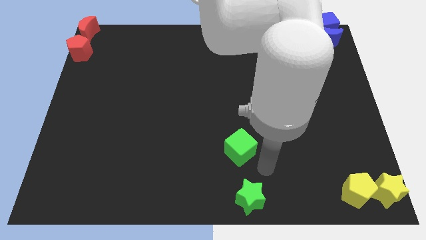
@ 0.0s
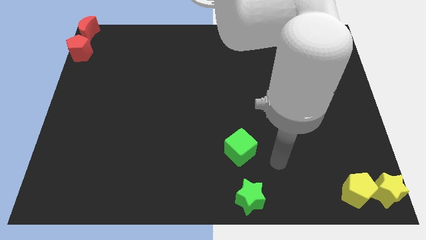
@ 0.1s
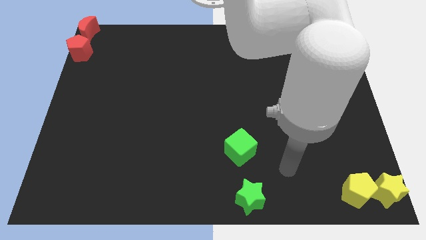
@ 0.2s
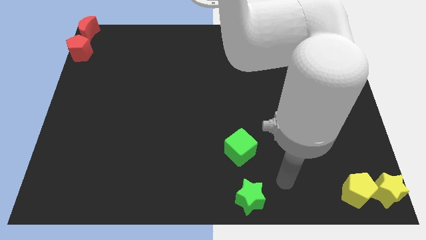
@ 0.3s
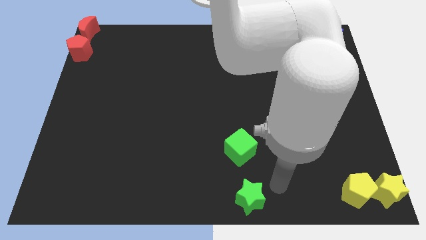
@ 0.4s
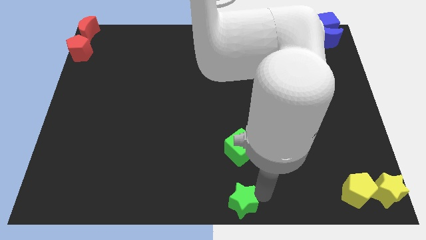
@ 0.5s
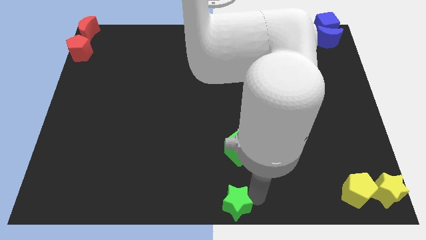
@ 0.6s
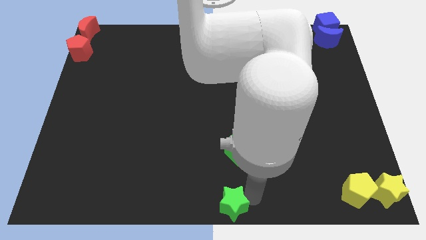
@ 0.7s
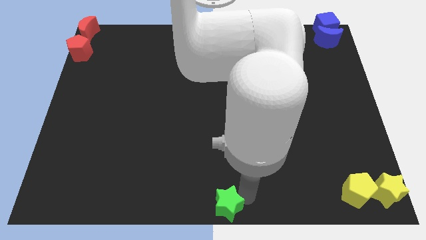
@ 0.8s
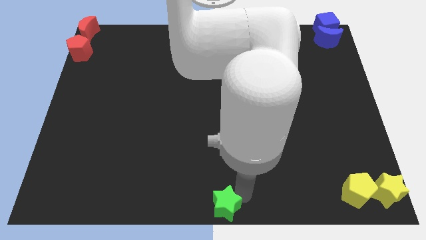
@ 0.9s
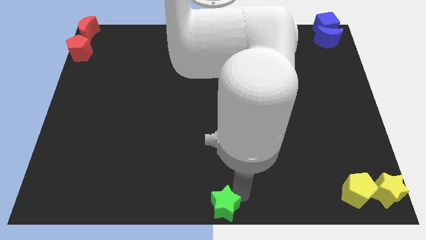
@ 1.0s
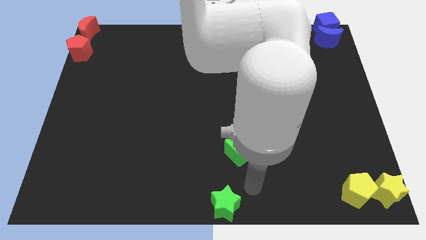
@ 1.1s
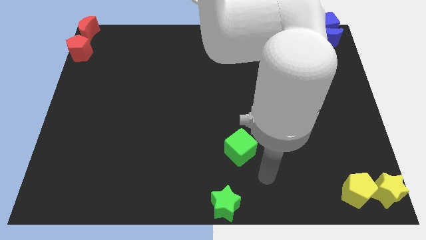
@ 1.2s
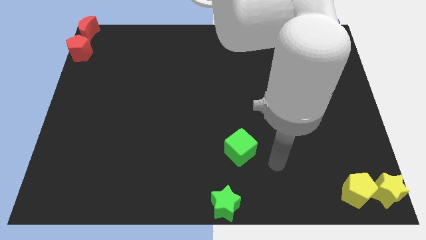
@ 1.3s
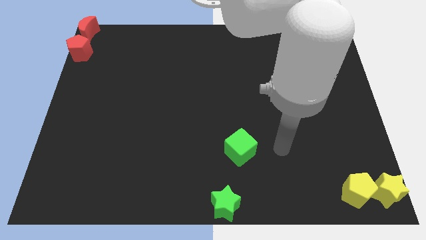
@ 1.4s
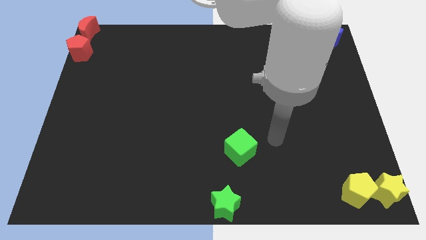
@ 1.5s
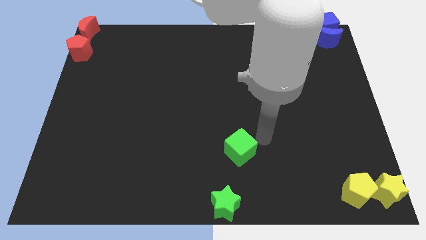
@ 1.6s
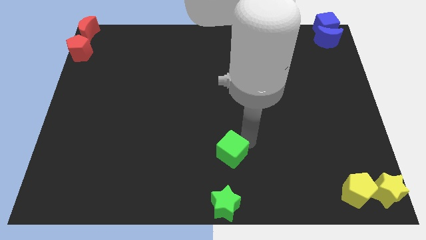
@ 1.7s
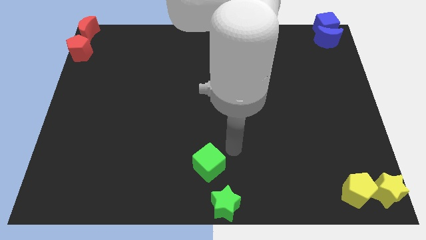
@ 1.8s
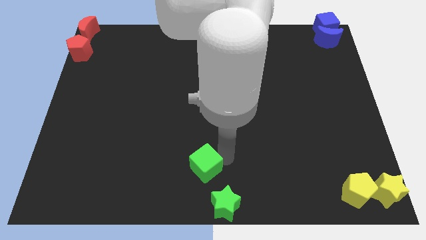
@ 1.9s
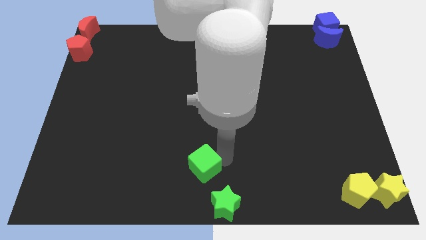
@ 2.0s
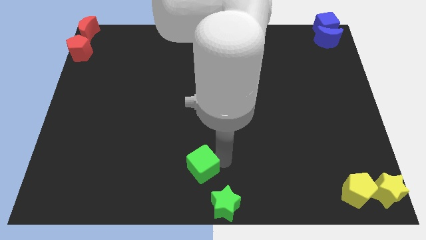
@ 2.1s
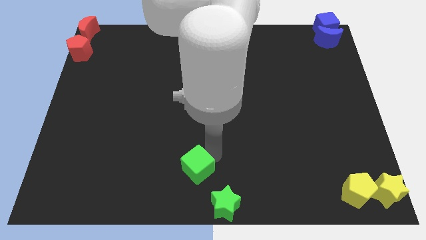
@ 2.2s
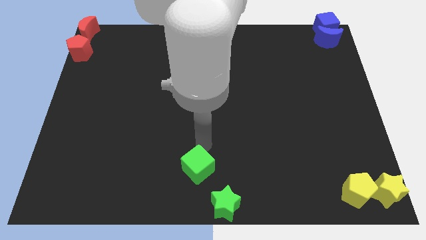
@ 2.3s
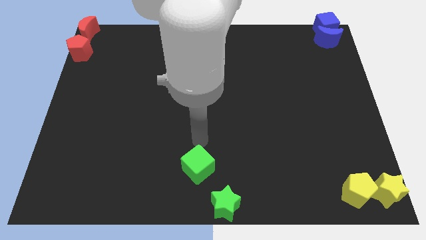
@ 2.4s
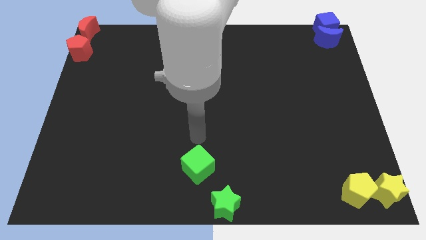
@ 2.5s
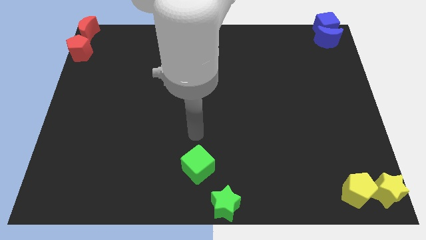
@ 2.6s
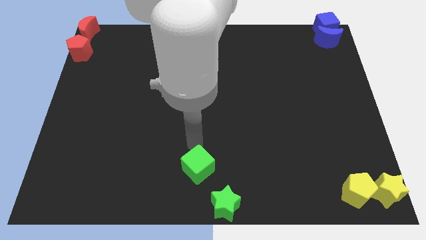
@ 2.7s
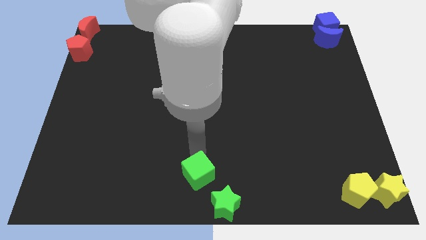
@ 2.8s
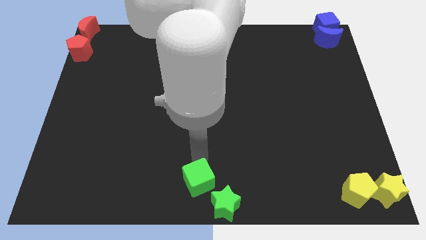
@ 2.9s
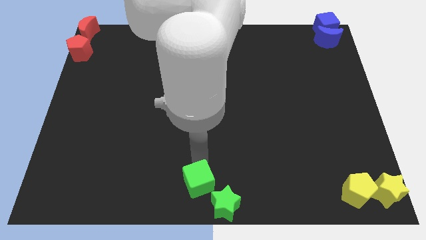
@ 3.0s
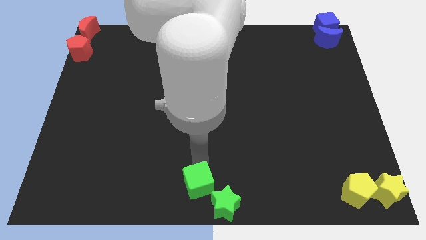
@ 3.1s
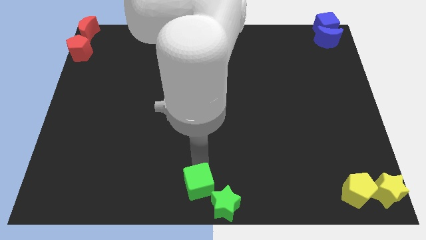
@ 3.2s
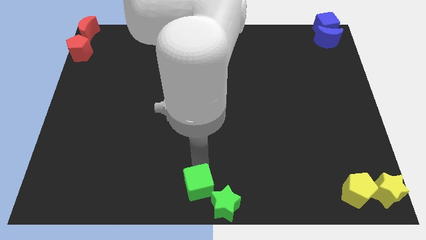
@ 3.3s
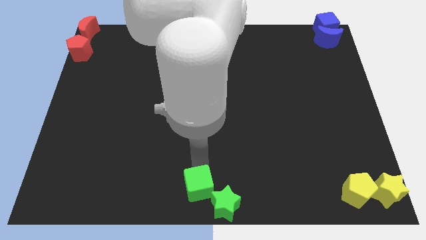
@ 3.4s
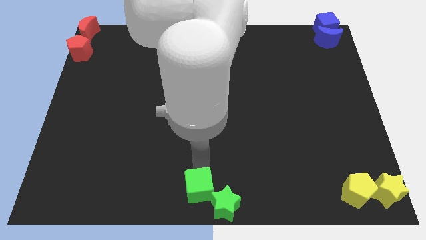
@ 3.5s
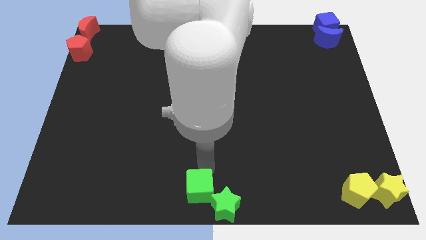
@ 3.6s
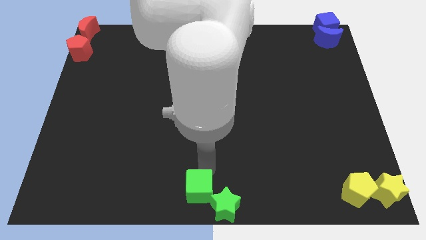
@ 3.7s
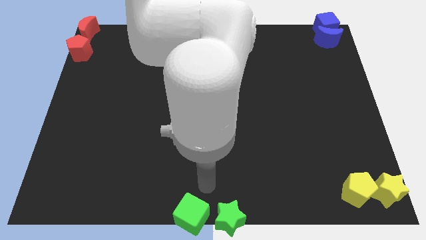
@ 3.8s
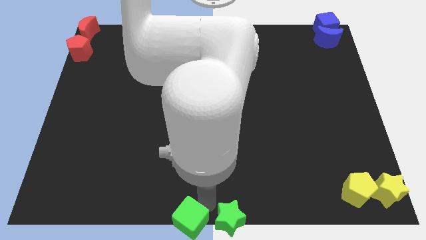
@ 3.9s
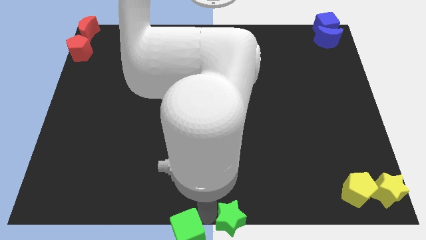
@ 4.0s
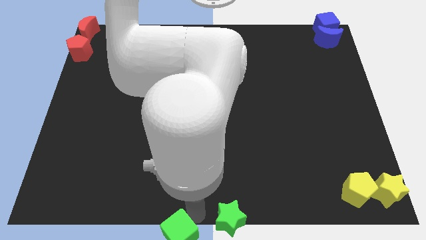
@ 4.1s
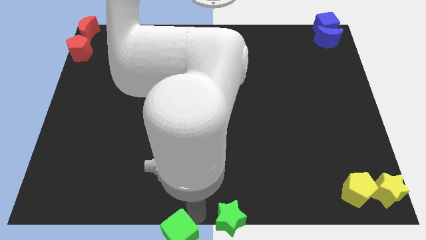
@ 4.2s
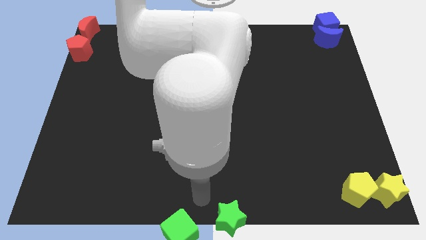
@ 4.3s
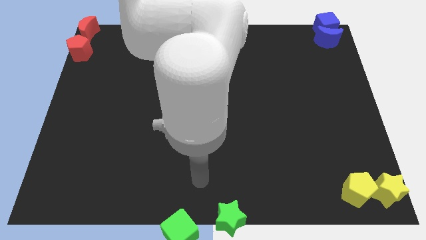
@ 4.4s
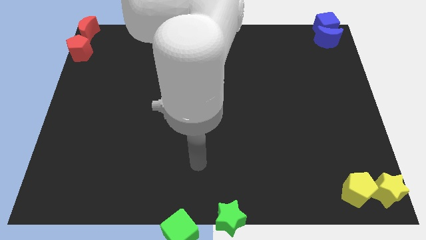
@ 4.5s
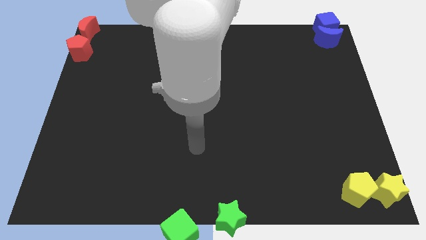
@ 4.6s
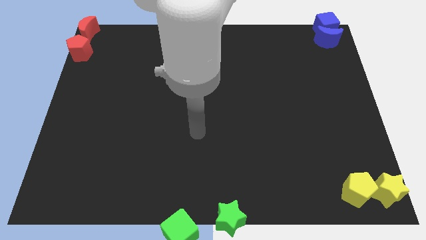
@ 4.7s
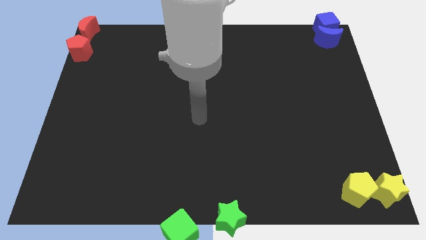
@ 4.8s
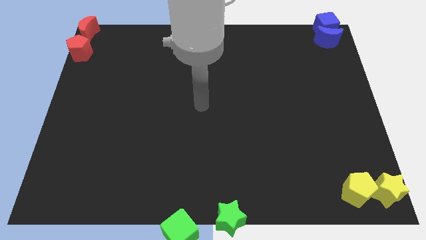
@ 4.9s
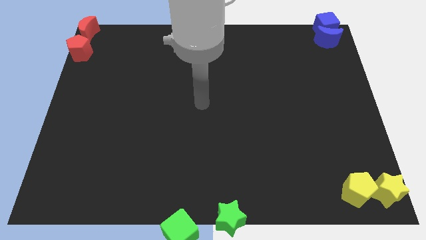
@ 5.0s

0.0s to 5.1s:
place the green cube at the bottom center of the board

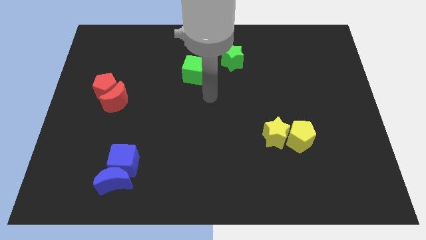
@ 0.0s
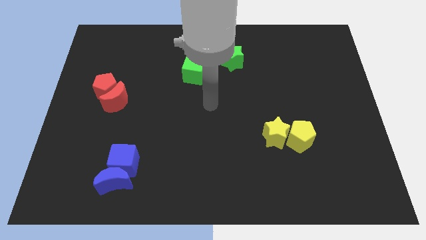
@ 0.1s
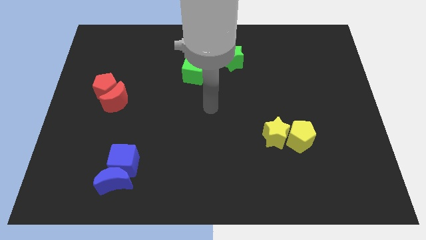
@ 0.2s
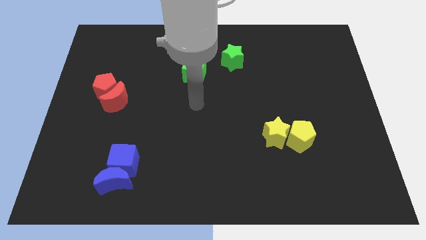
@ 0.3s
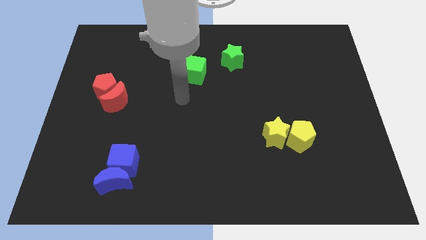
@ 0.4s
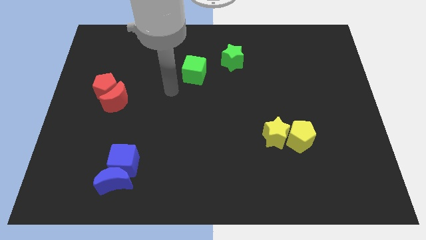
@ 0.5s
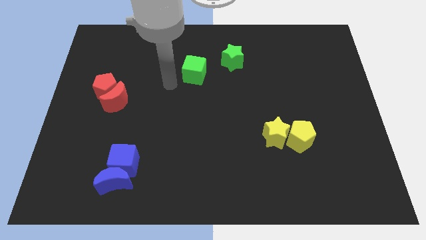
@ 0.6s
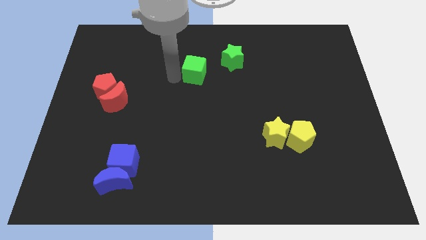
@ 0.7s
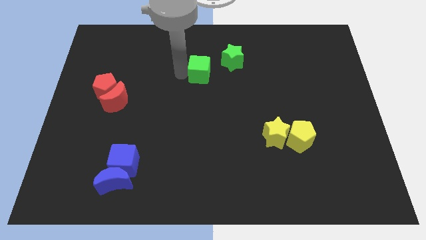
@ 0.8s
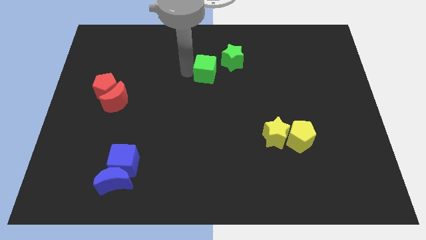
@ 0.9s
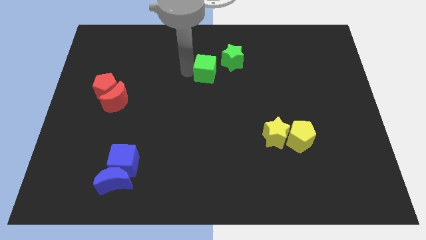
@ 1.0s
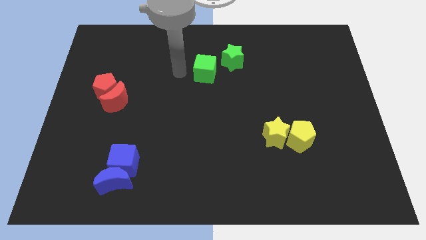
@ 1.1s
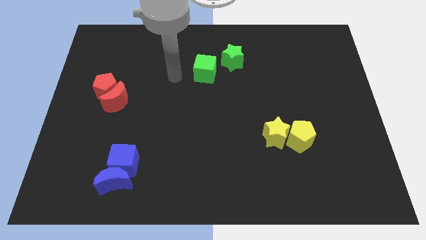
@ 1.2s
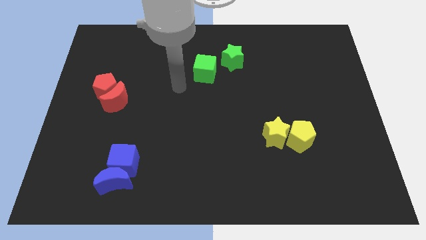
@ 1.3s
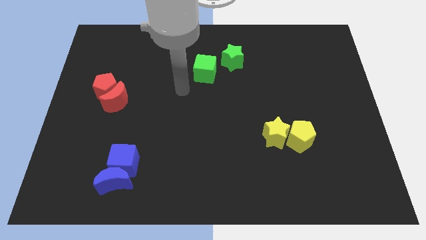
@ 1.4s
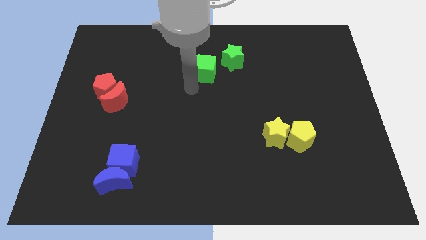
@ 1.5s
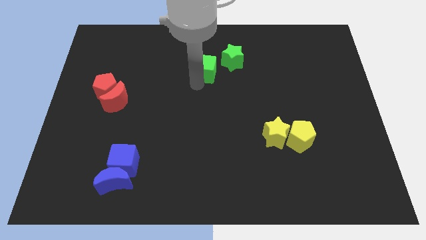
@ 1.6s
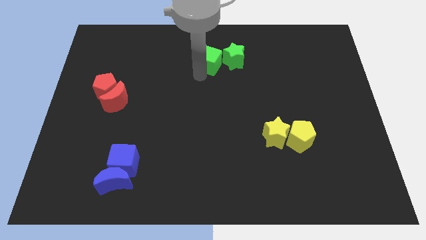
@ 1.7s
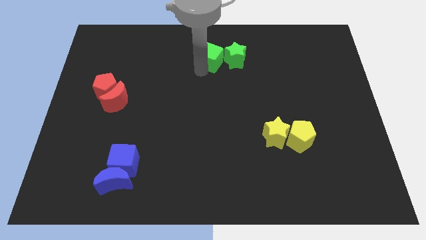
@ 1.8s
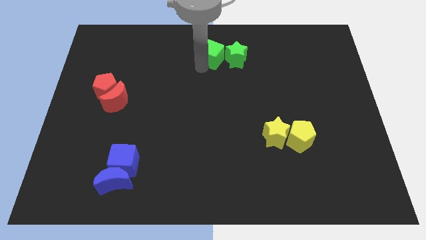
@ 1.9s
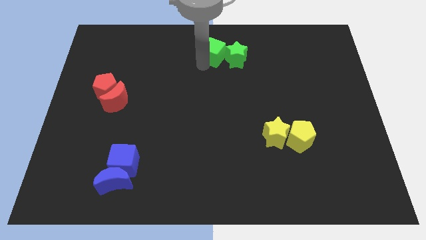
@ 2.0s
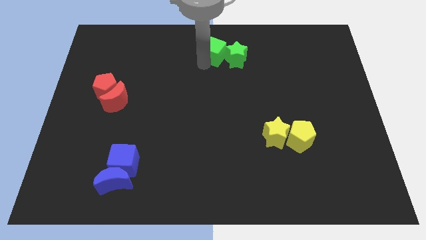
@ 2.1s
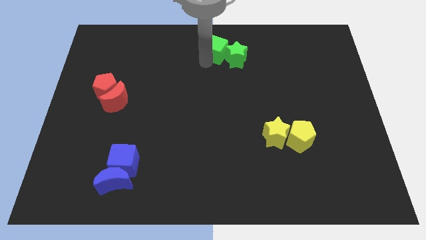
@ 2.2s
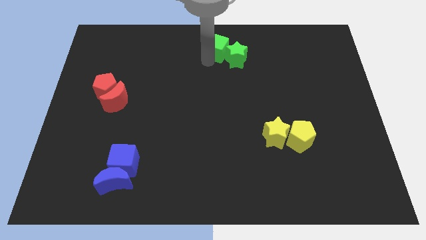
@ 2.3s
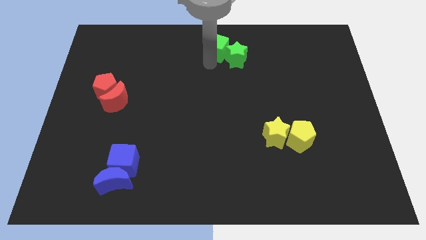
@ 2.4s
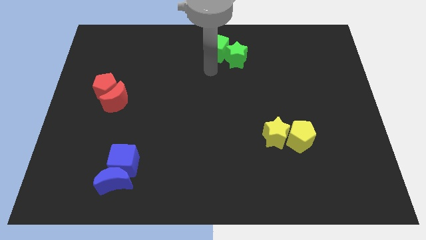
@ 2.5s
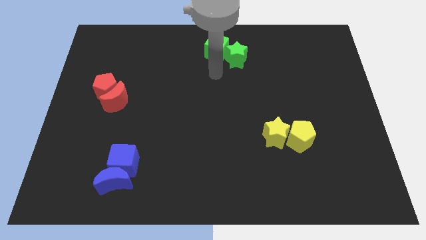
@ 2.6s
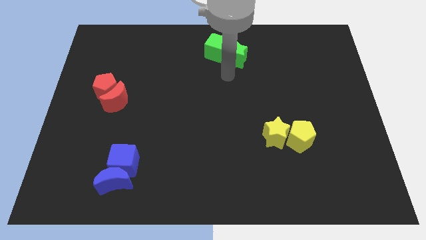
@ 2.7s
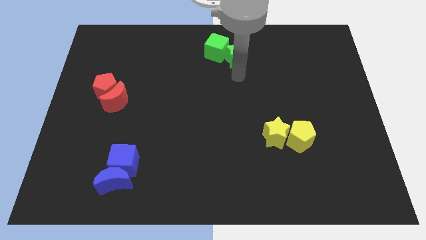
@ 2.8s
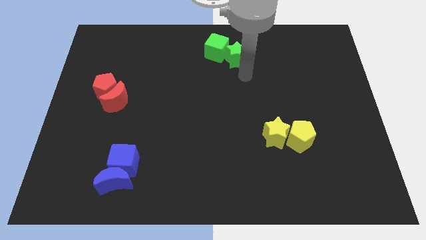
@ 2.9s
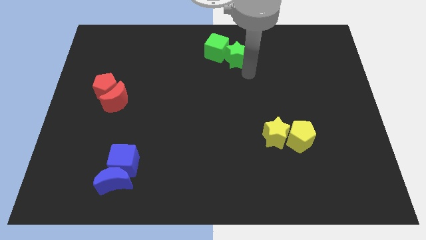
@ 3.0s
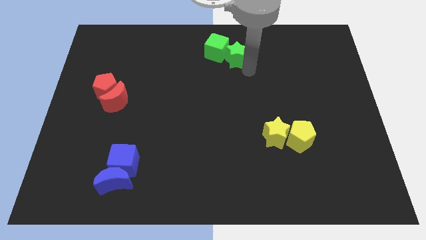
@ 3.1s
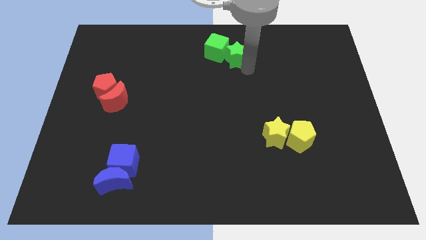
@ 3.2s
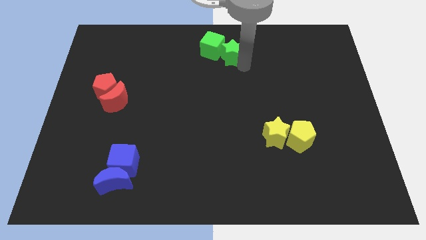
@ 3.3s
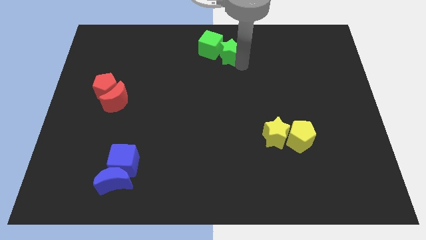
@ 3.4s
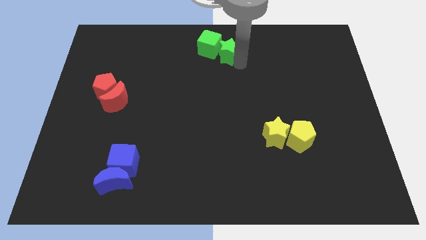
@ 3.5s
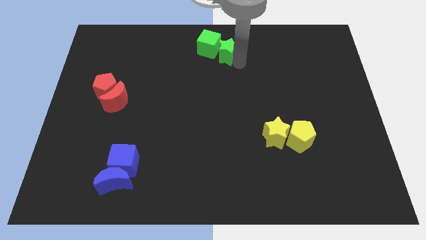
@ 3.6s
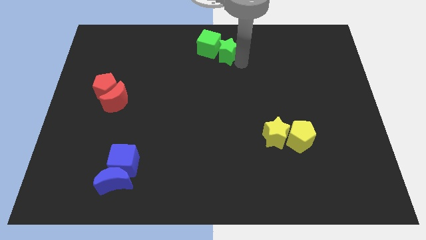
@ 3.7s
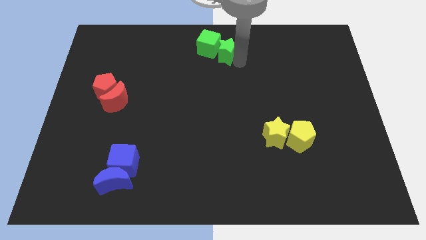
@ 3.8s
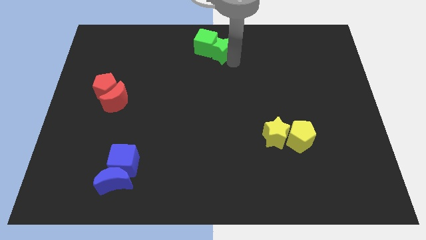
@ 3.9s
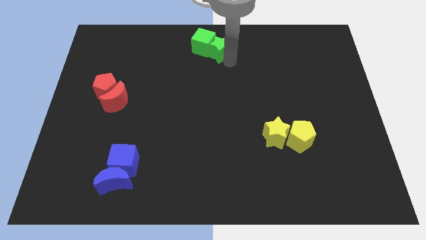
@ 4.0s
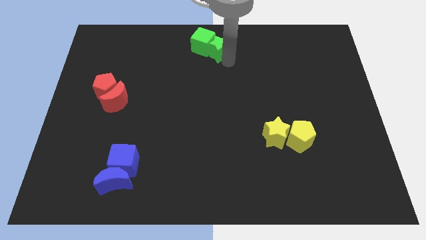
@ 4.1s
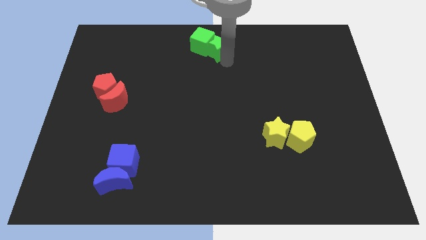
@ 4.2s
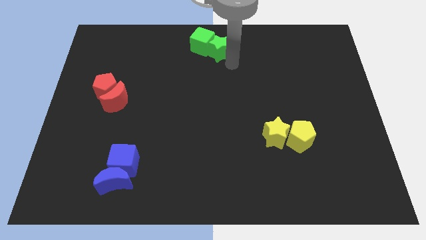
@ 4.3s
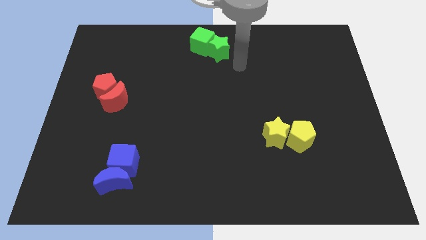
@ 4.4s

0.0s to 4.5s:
place both the green star and green cube at the top center side
